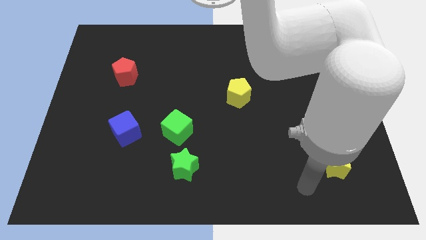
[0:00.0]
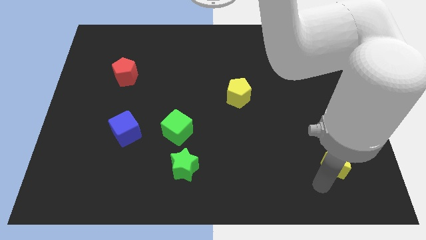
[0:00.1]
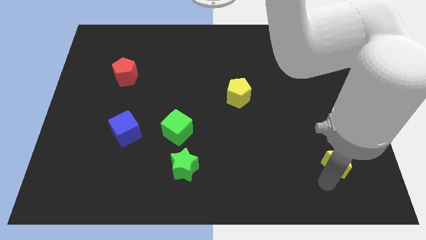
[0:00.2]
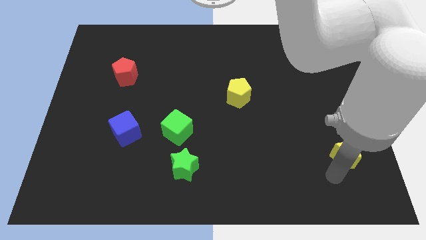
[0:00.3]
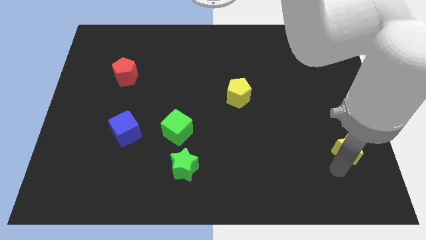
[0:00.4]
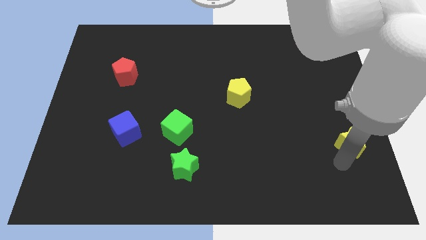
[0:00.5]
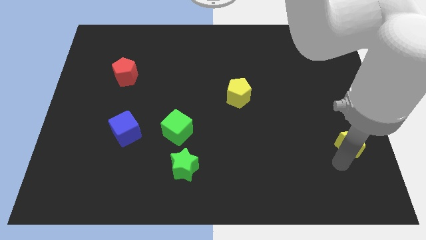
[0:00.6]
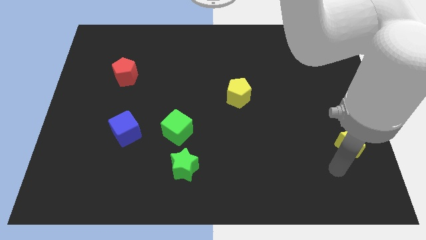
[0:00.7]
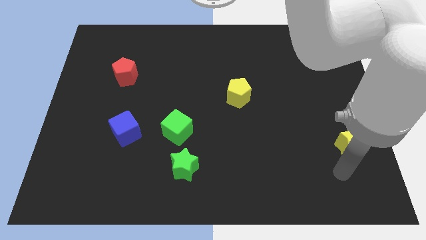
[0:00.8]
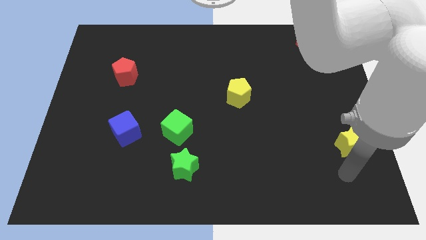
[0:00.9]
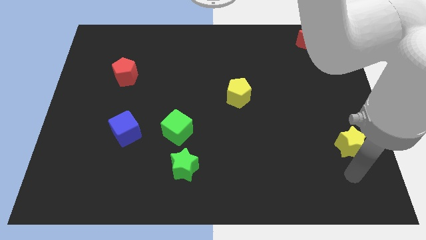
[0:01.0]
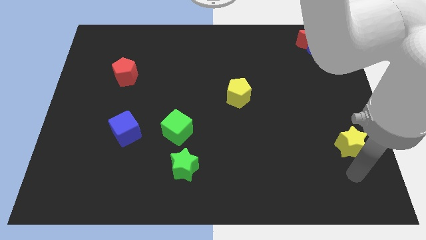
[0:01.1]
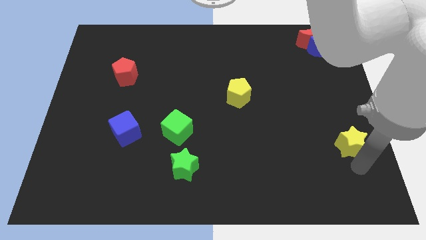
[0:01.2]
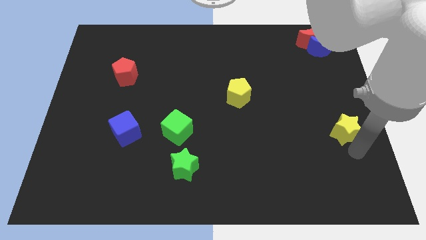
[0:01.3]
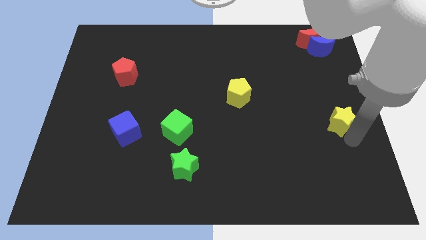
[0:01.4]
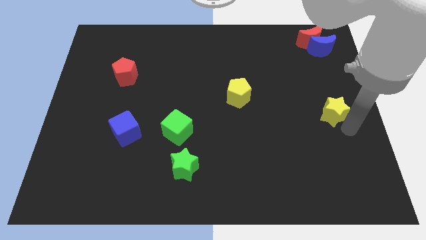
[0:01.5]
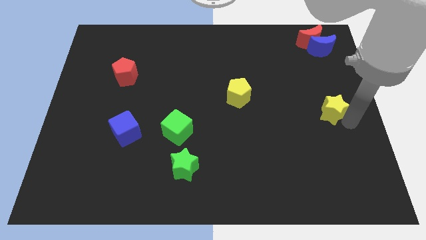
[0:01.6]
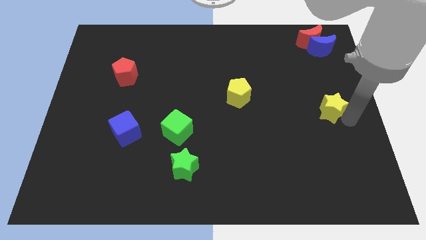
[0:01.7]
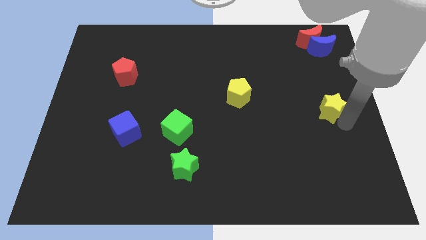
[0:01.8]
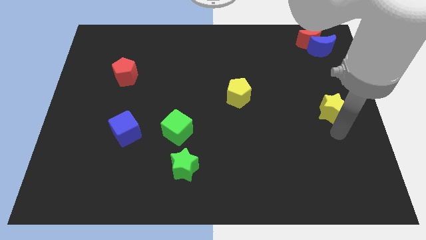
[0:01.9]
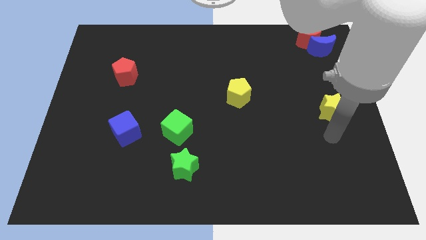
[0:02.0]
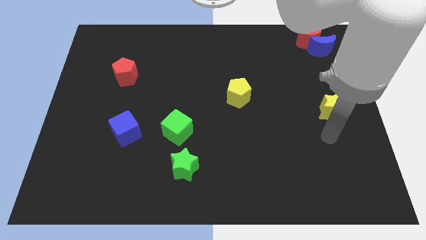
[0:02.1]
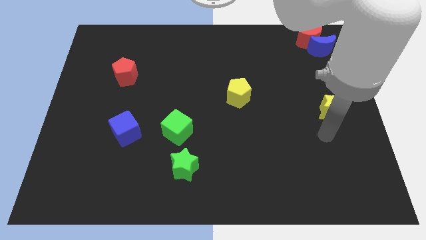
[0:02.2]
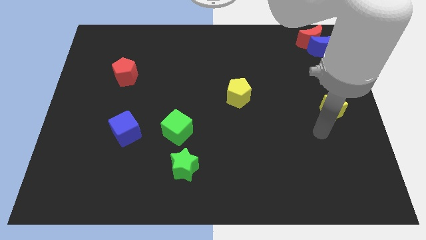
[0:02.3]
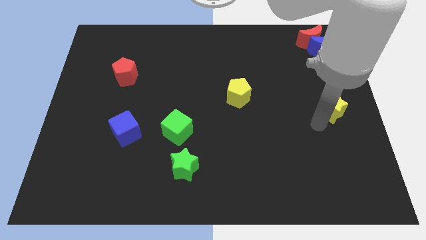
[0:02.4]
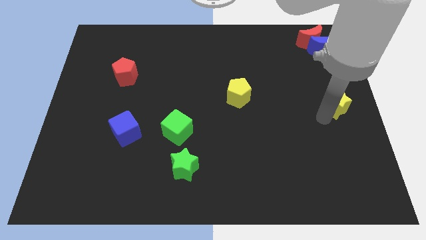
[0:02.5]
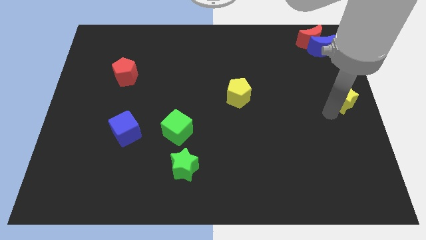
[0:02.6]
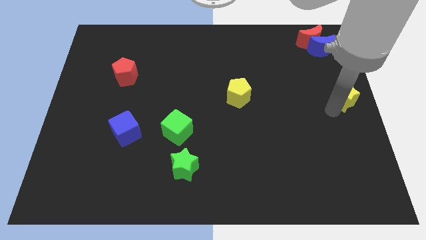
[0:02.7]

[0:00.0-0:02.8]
move the yellow star to the right of the yellow pentagon

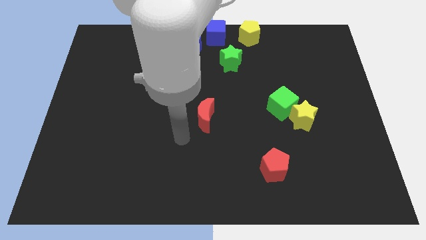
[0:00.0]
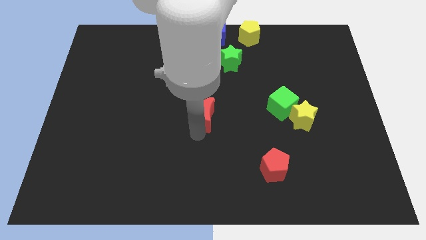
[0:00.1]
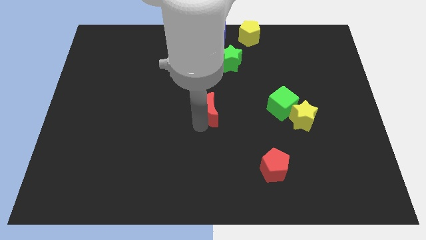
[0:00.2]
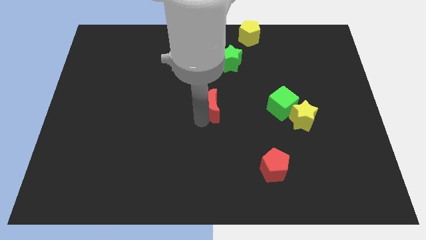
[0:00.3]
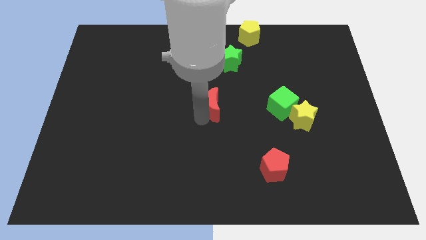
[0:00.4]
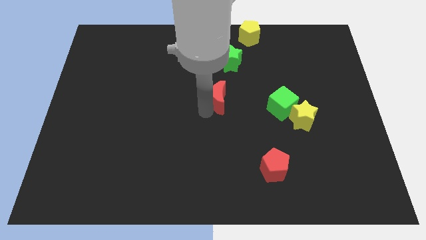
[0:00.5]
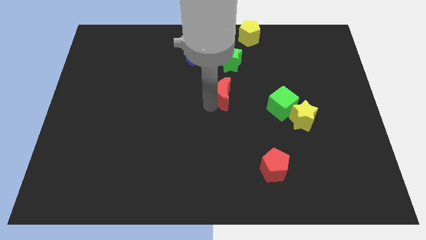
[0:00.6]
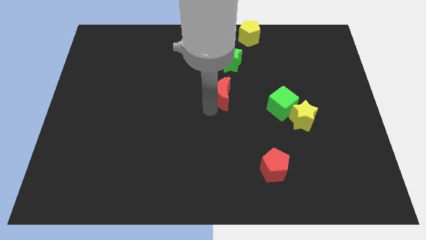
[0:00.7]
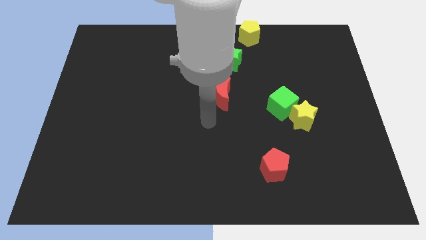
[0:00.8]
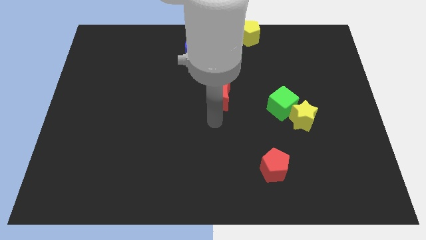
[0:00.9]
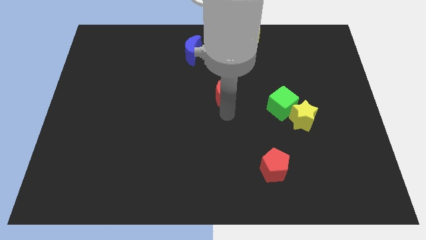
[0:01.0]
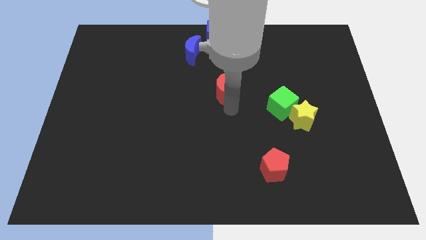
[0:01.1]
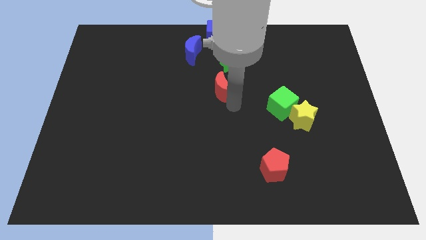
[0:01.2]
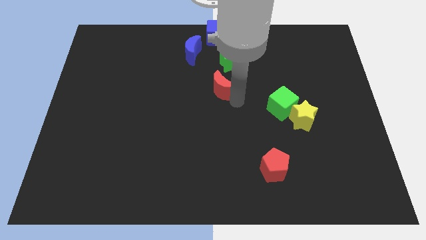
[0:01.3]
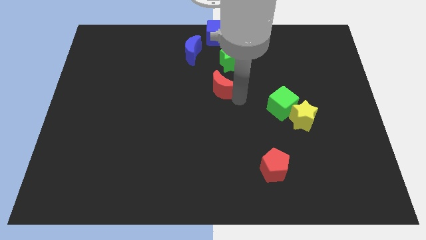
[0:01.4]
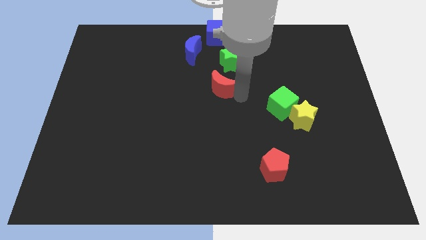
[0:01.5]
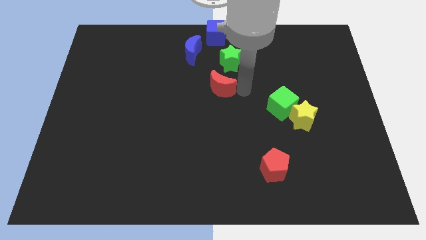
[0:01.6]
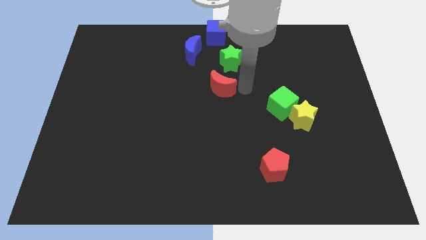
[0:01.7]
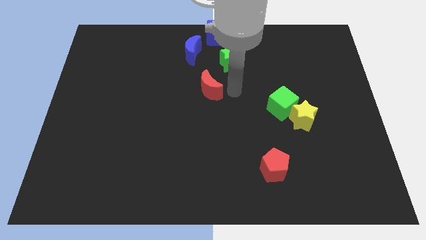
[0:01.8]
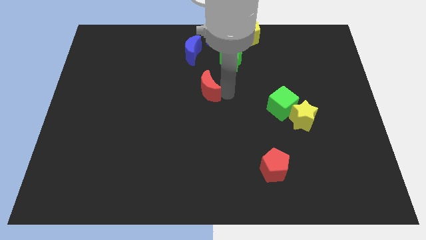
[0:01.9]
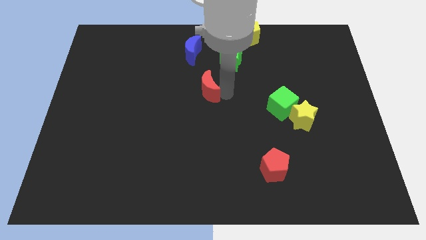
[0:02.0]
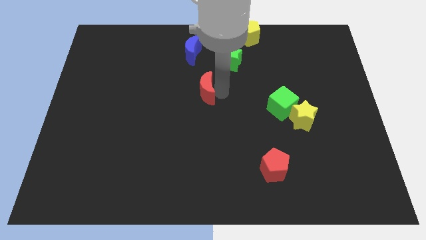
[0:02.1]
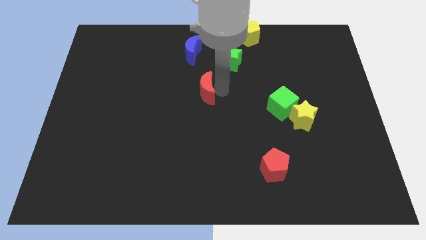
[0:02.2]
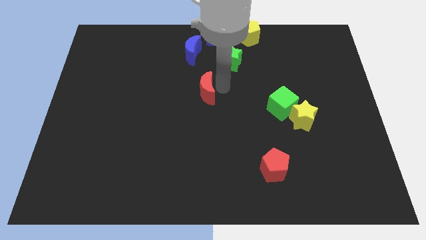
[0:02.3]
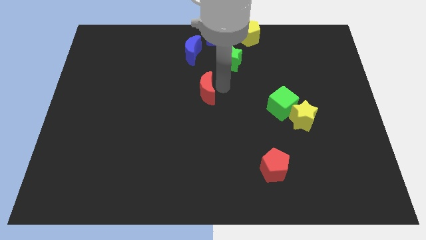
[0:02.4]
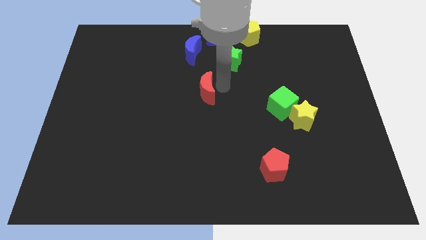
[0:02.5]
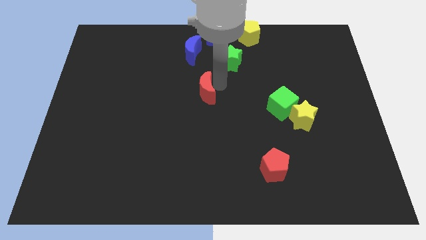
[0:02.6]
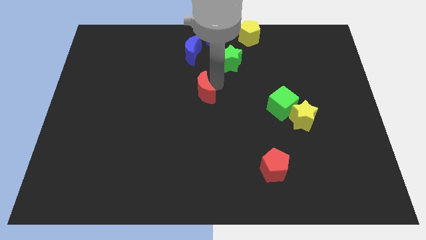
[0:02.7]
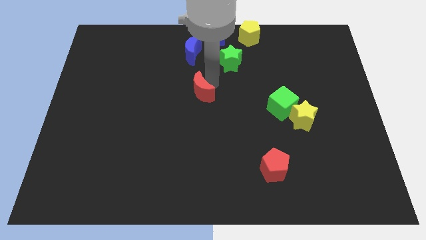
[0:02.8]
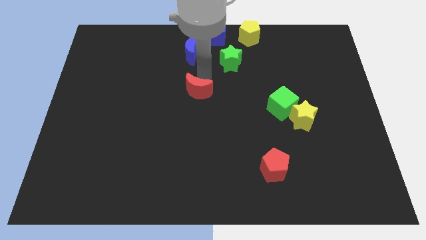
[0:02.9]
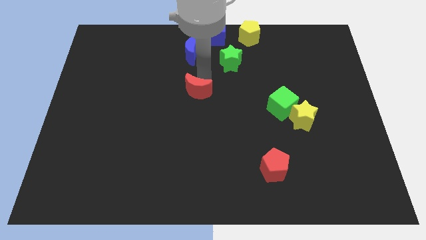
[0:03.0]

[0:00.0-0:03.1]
move the red crescent to the bottom of the blue crescent

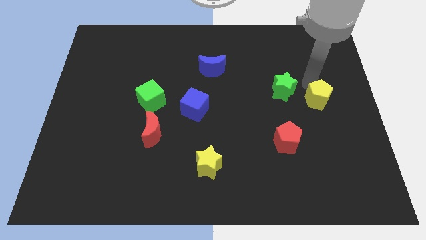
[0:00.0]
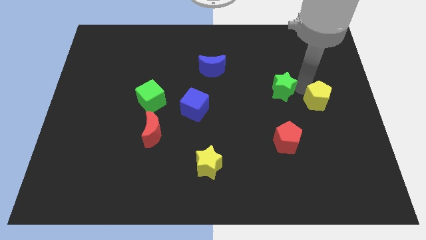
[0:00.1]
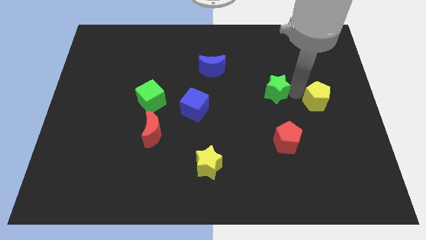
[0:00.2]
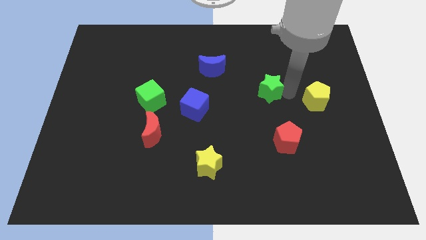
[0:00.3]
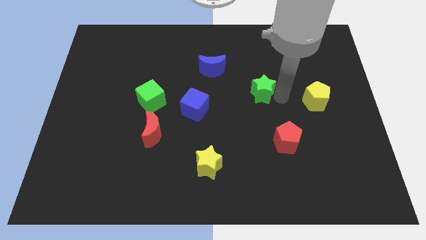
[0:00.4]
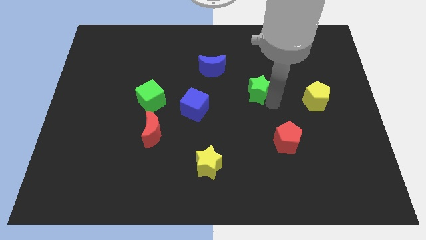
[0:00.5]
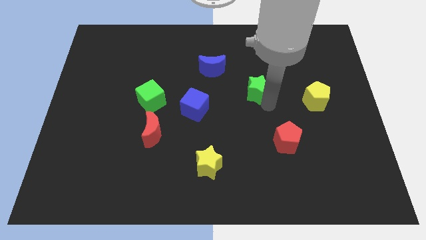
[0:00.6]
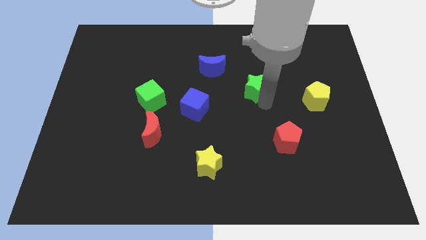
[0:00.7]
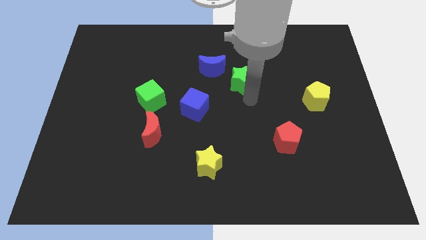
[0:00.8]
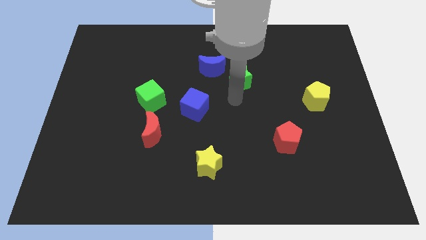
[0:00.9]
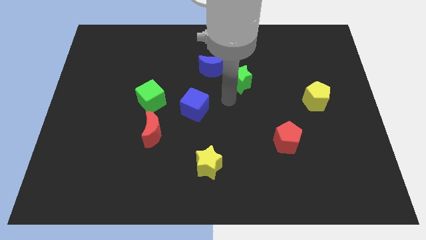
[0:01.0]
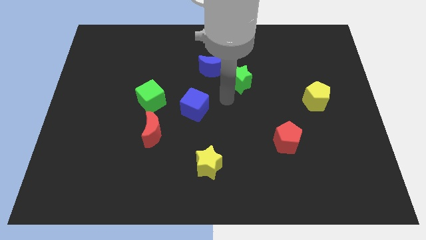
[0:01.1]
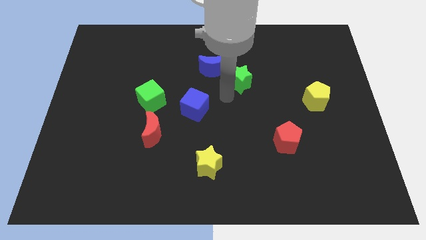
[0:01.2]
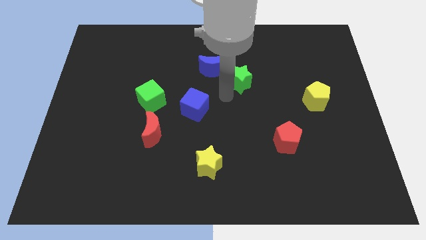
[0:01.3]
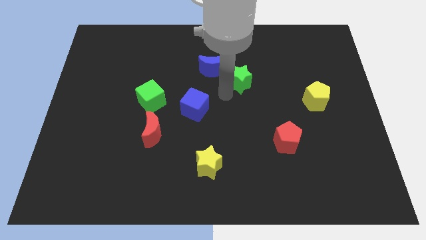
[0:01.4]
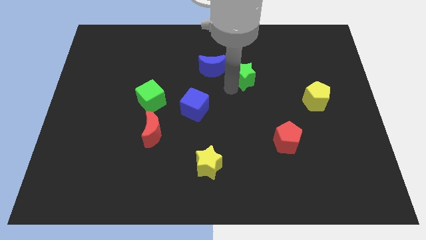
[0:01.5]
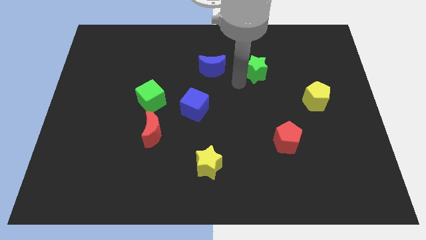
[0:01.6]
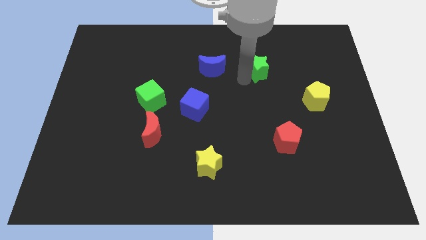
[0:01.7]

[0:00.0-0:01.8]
push the green star towards the blue moon

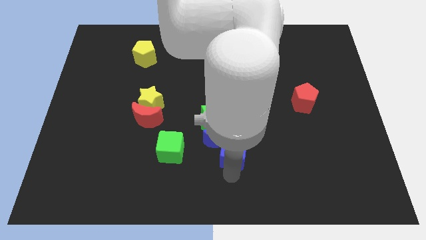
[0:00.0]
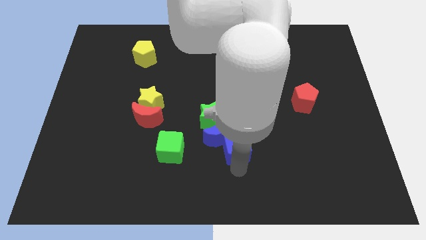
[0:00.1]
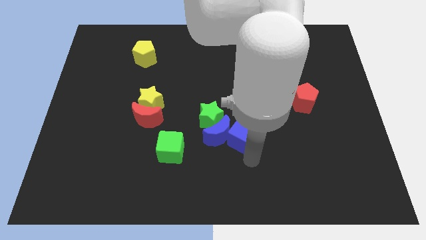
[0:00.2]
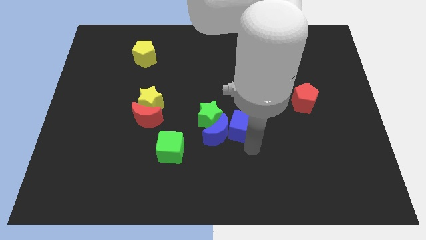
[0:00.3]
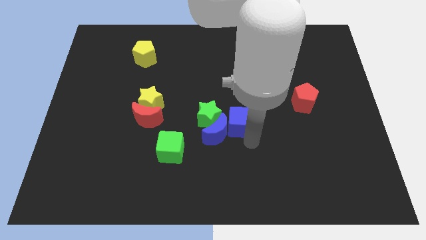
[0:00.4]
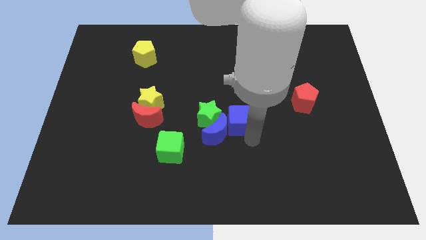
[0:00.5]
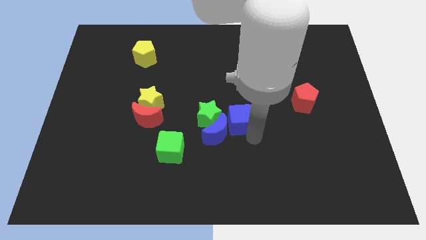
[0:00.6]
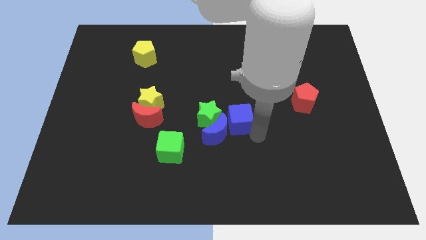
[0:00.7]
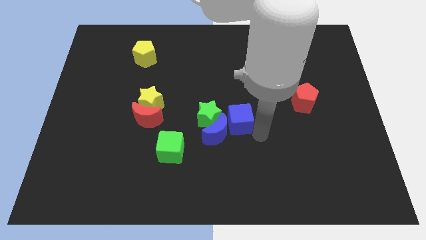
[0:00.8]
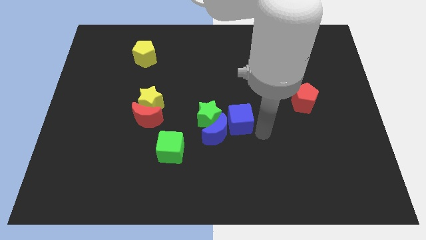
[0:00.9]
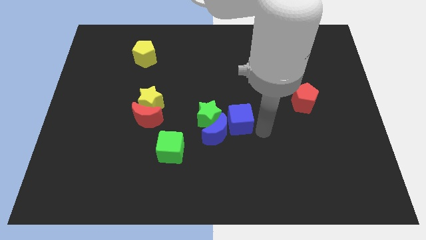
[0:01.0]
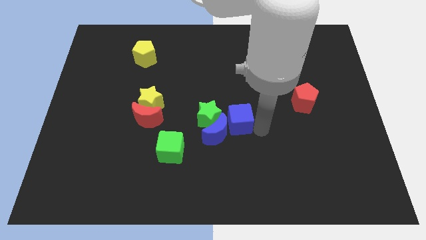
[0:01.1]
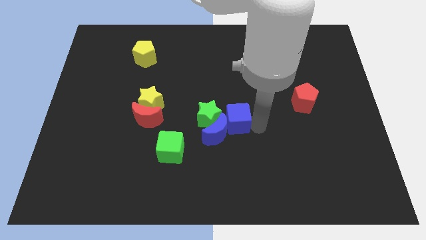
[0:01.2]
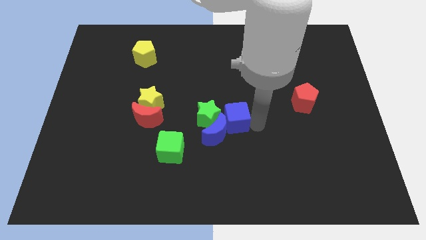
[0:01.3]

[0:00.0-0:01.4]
drag the blue cube slightly upwards
